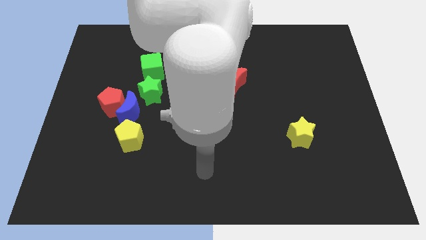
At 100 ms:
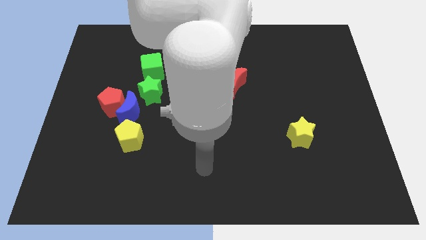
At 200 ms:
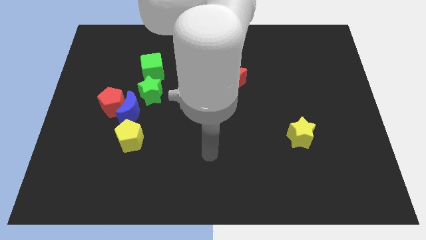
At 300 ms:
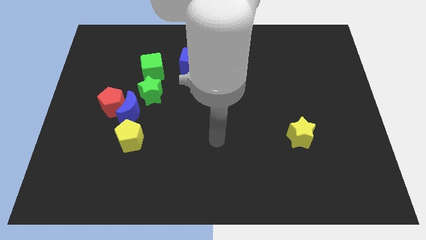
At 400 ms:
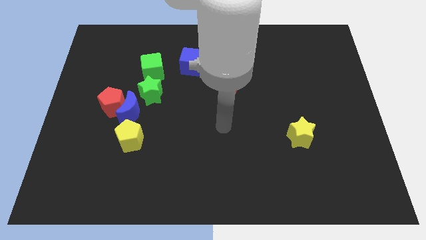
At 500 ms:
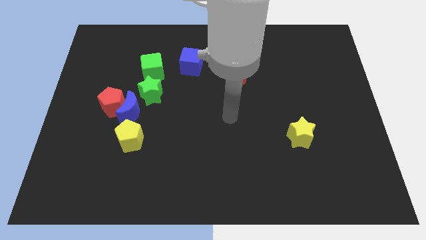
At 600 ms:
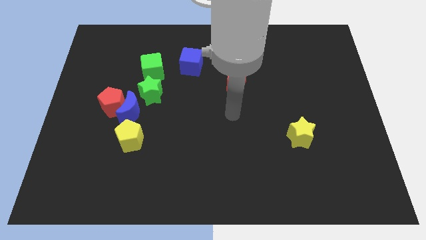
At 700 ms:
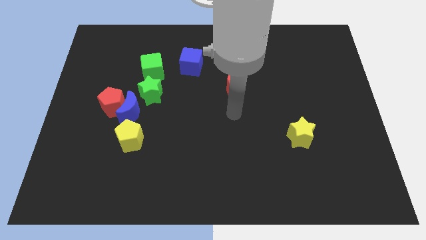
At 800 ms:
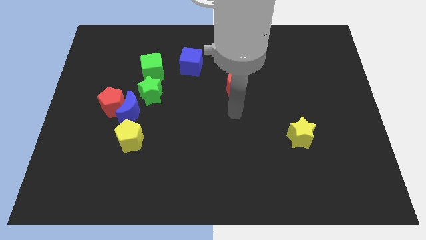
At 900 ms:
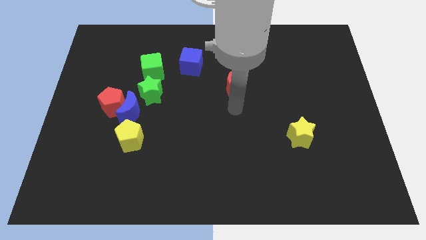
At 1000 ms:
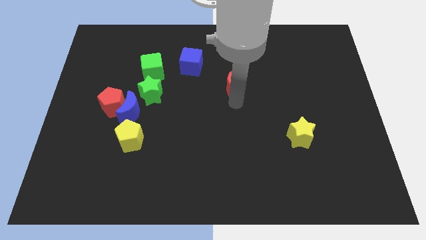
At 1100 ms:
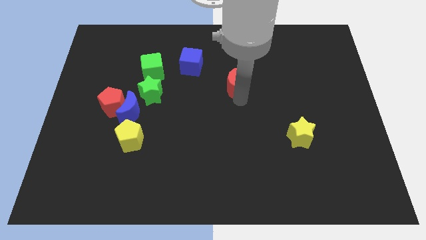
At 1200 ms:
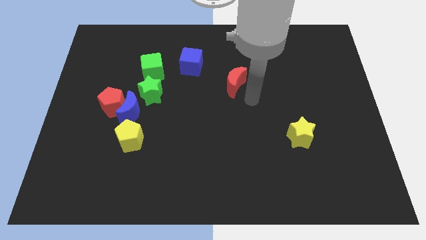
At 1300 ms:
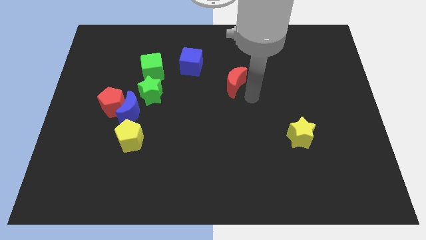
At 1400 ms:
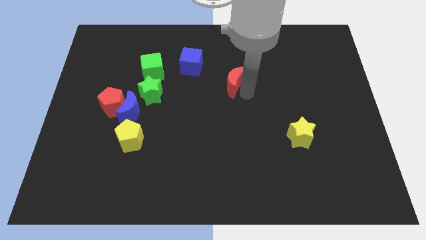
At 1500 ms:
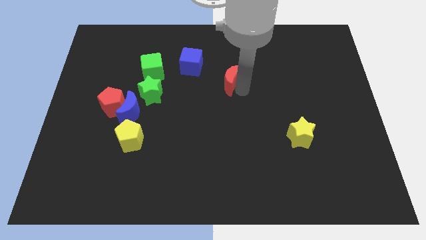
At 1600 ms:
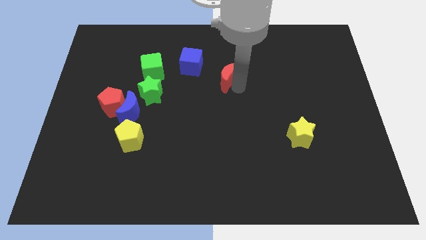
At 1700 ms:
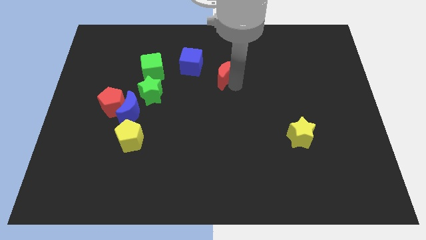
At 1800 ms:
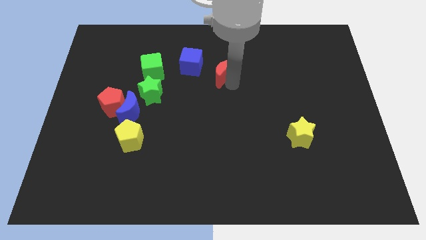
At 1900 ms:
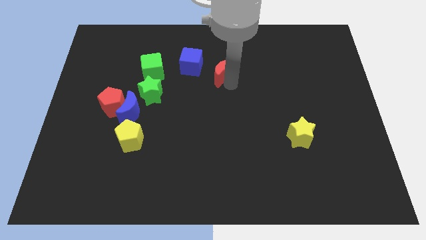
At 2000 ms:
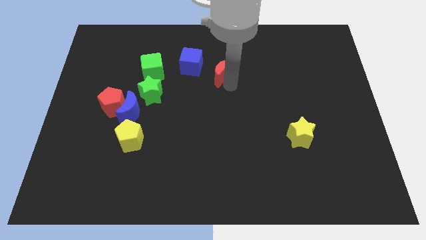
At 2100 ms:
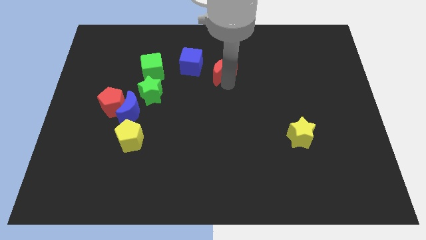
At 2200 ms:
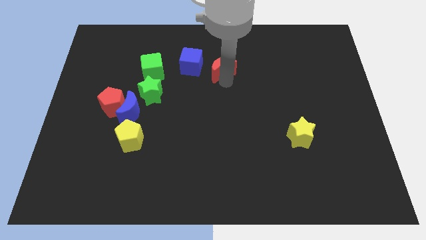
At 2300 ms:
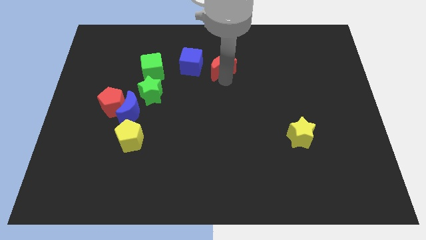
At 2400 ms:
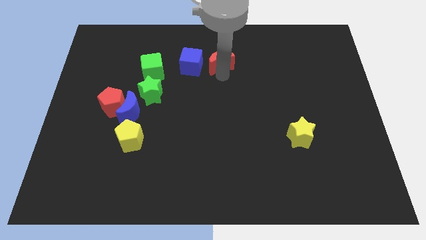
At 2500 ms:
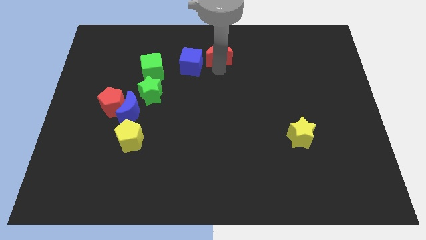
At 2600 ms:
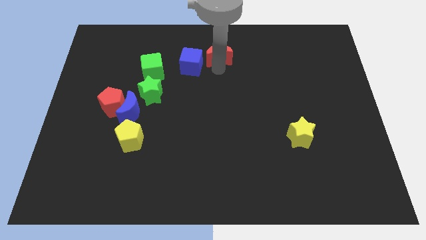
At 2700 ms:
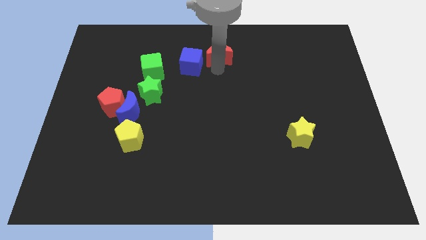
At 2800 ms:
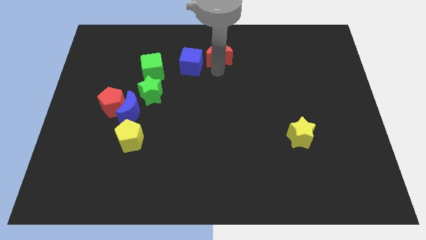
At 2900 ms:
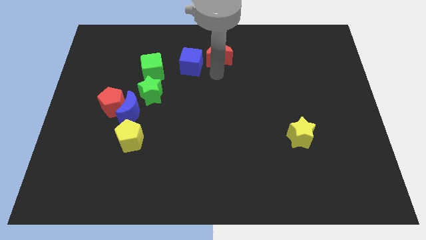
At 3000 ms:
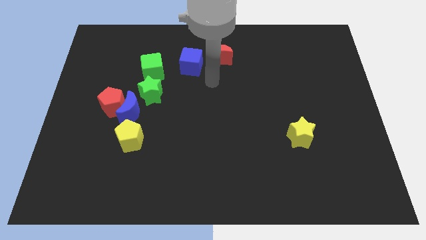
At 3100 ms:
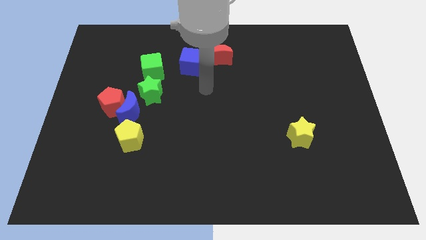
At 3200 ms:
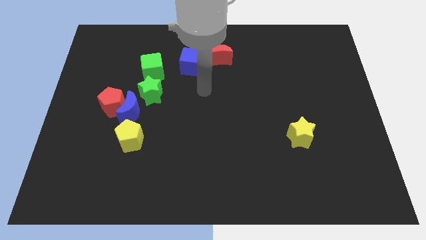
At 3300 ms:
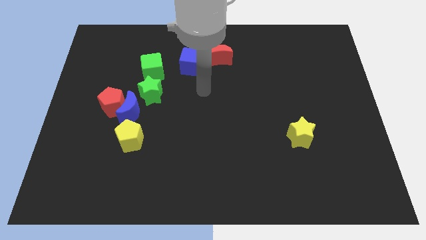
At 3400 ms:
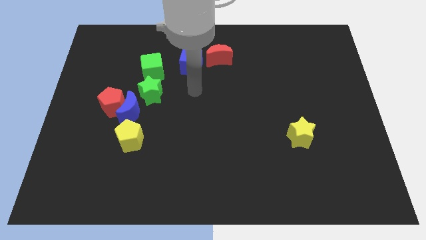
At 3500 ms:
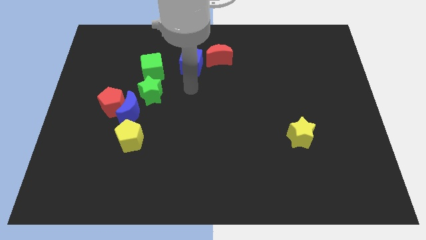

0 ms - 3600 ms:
move the red crescent close to the top right side of the blue cube

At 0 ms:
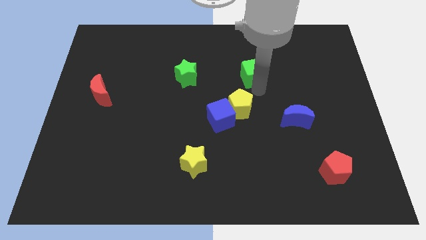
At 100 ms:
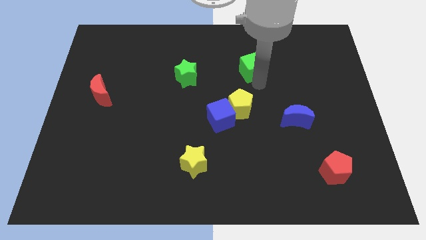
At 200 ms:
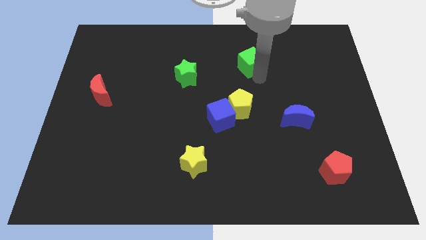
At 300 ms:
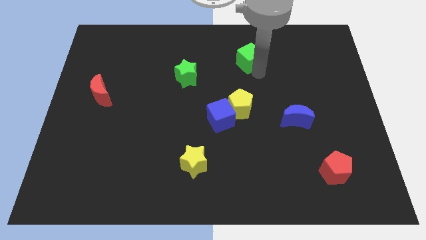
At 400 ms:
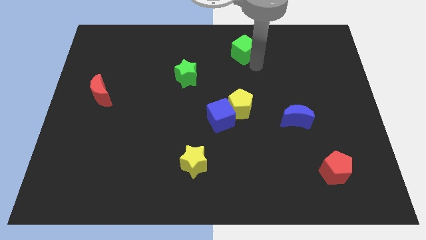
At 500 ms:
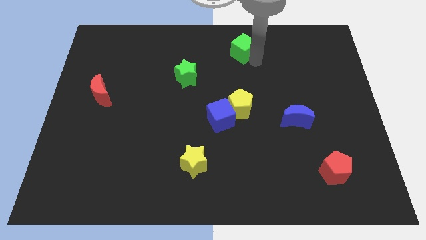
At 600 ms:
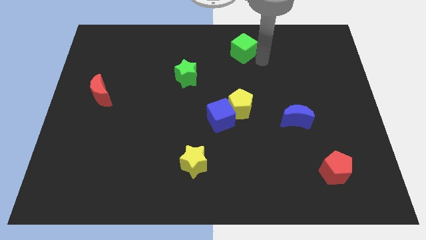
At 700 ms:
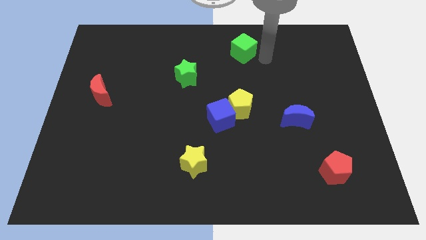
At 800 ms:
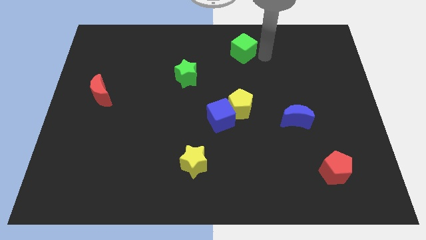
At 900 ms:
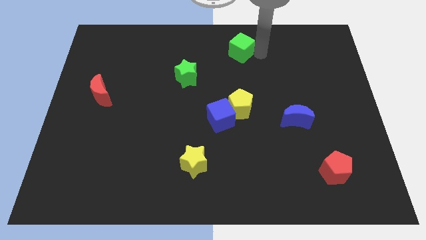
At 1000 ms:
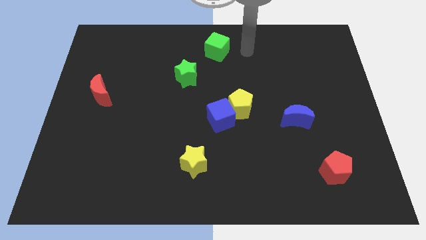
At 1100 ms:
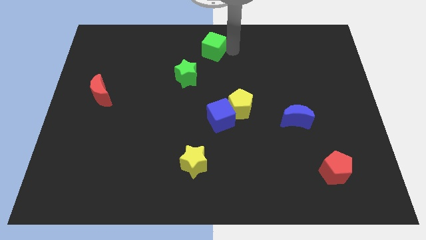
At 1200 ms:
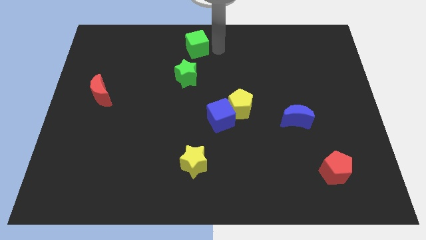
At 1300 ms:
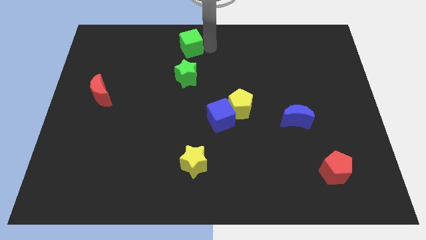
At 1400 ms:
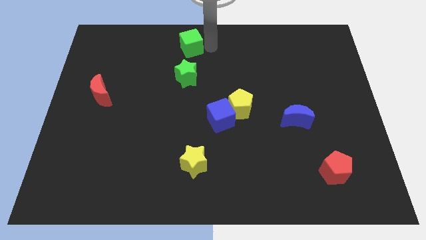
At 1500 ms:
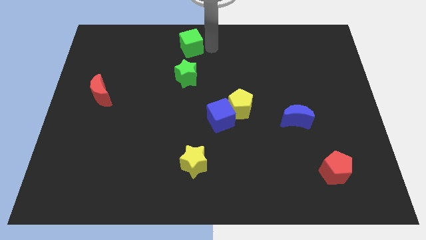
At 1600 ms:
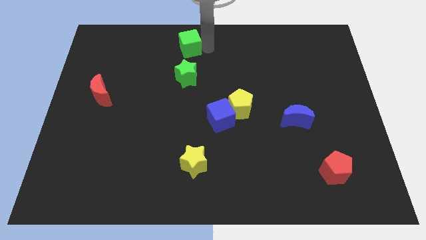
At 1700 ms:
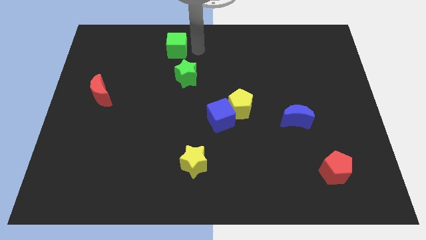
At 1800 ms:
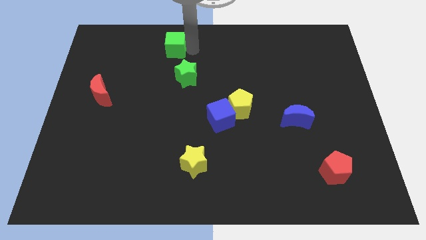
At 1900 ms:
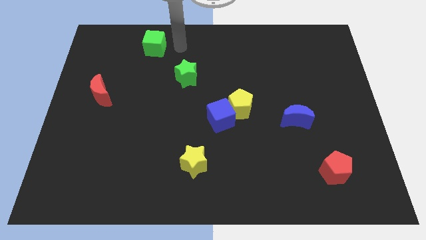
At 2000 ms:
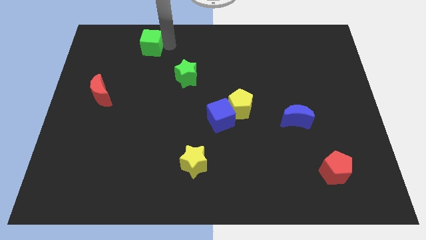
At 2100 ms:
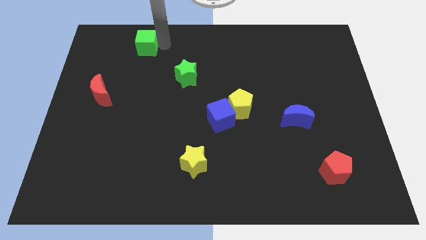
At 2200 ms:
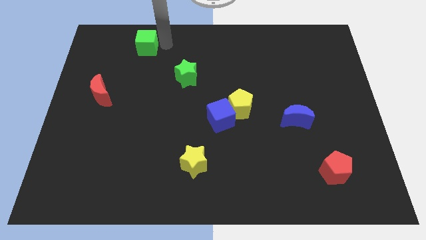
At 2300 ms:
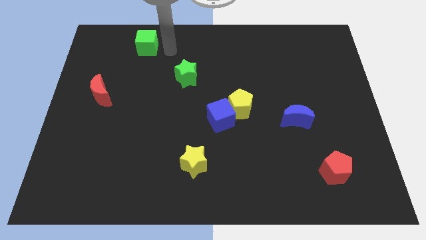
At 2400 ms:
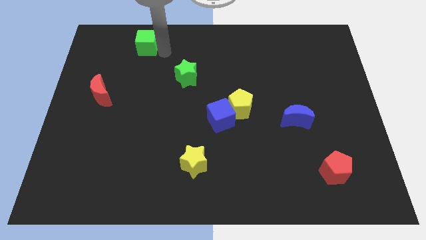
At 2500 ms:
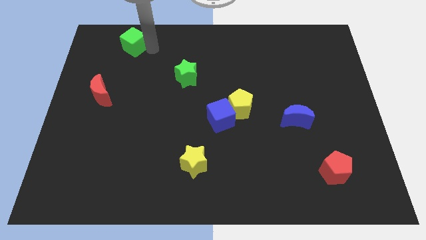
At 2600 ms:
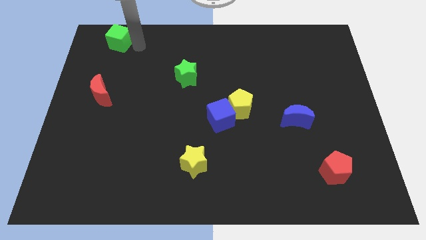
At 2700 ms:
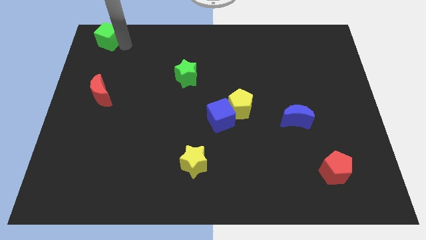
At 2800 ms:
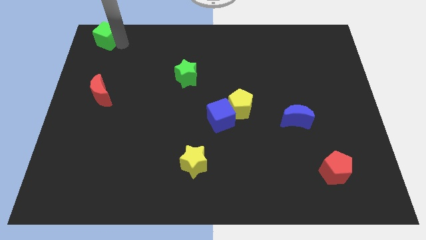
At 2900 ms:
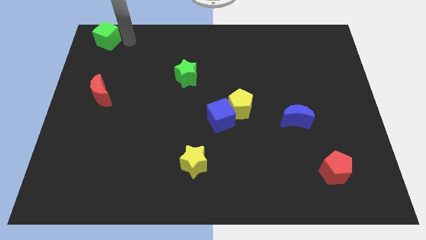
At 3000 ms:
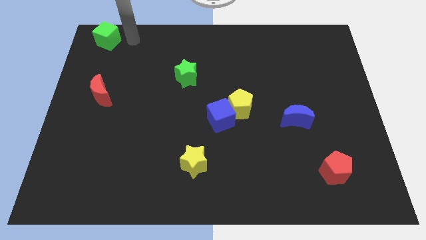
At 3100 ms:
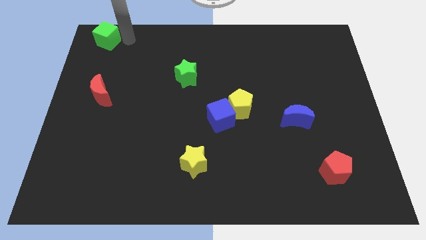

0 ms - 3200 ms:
push the green cube towards the top left of the board

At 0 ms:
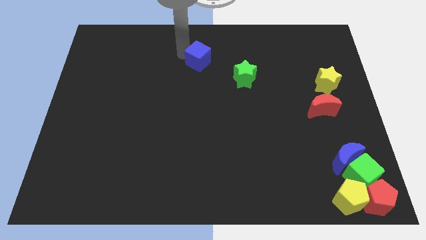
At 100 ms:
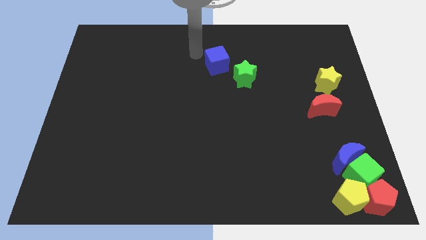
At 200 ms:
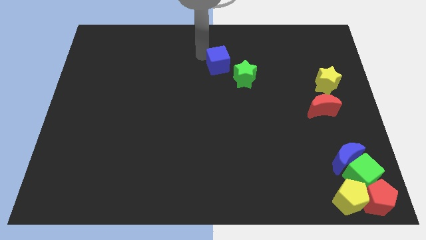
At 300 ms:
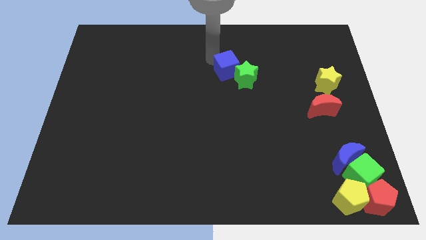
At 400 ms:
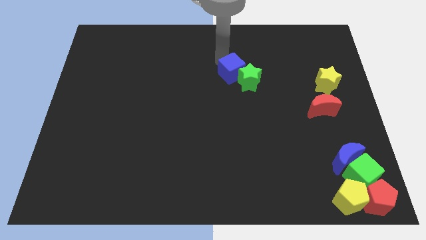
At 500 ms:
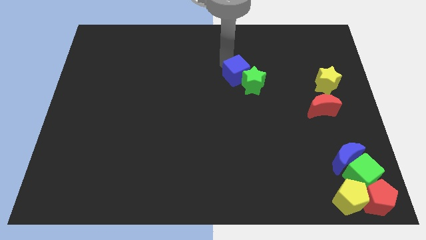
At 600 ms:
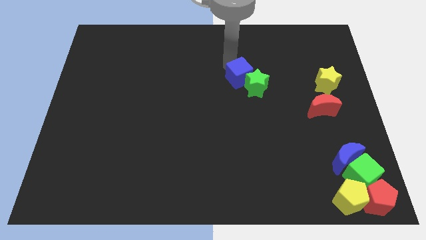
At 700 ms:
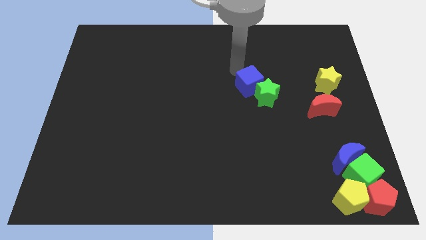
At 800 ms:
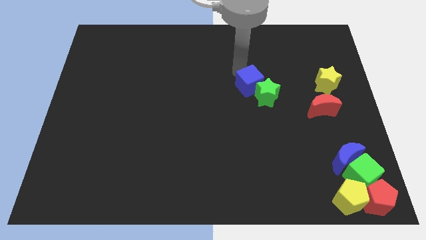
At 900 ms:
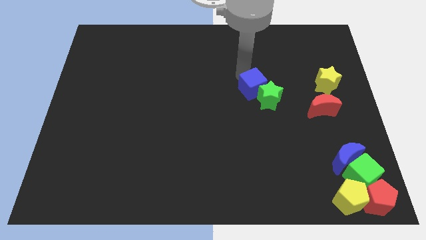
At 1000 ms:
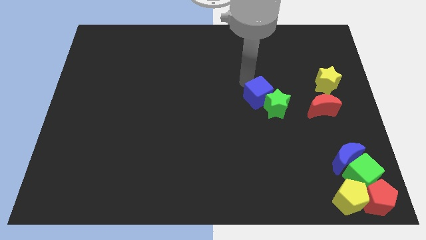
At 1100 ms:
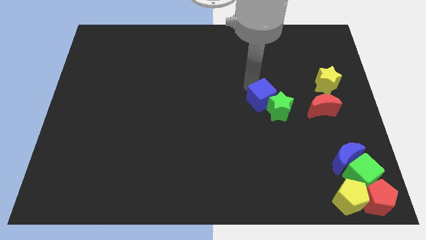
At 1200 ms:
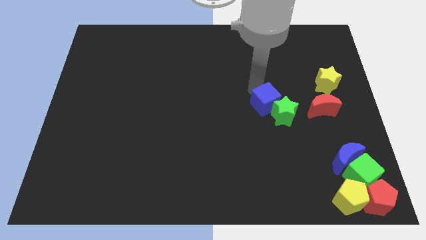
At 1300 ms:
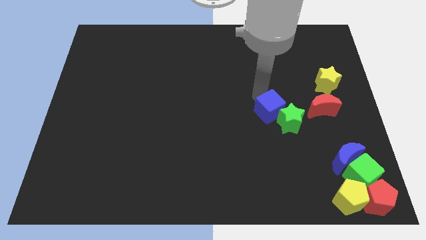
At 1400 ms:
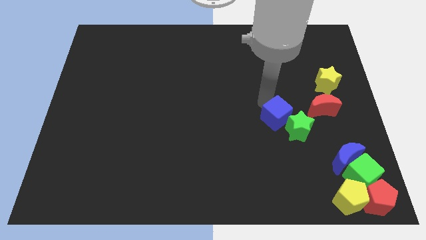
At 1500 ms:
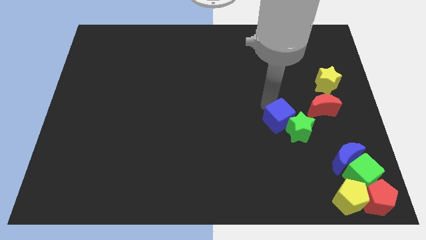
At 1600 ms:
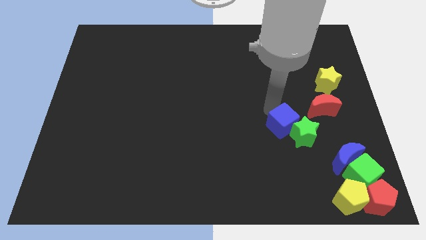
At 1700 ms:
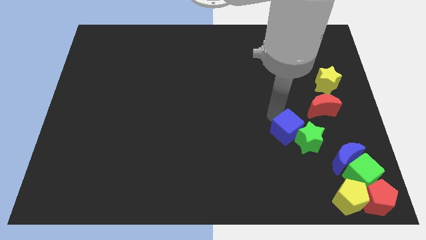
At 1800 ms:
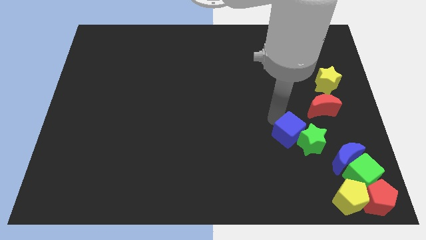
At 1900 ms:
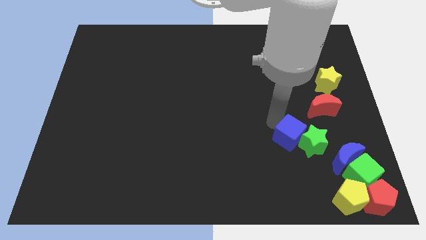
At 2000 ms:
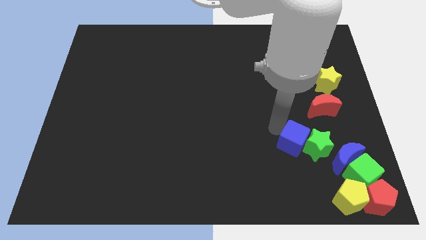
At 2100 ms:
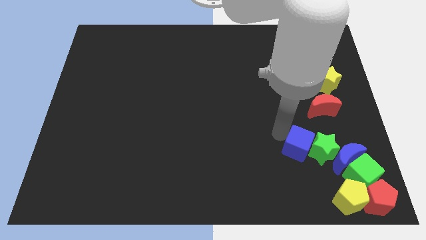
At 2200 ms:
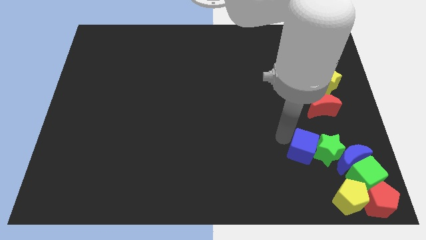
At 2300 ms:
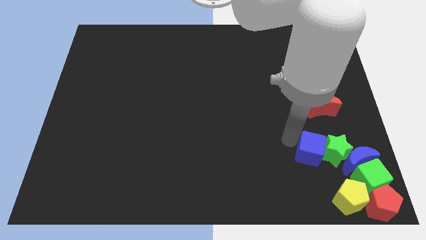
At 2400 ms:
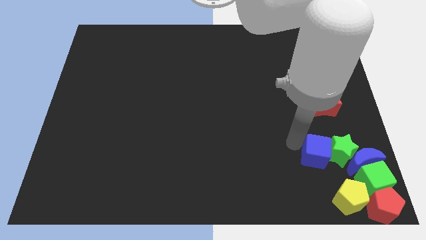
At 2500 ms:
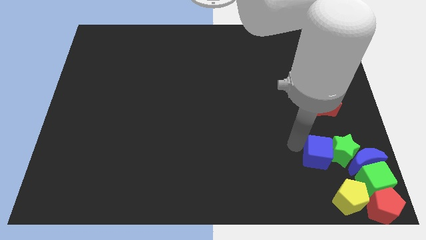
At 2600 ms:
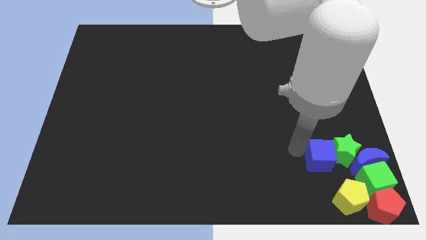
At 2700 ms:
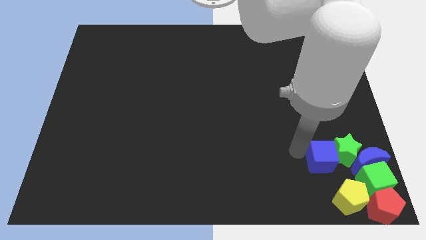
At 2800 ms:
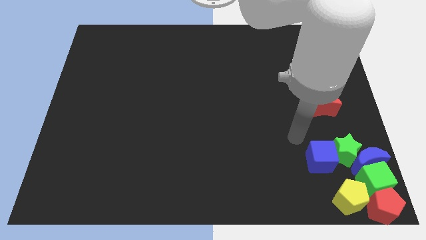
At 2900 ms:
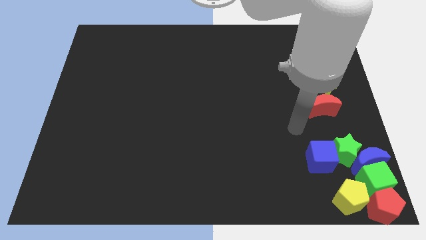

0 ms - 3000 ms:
push blue cube and green star into the group of blocks
